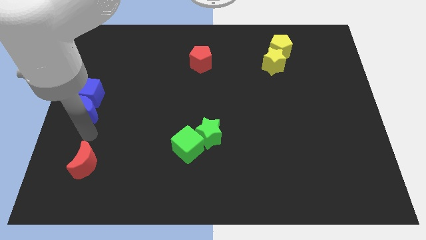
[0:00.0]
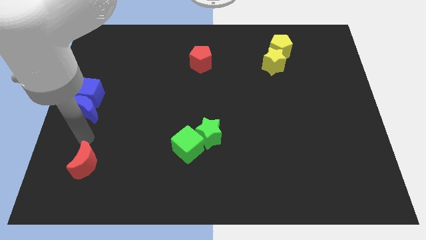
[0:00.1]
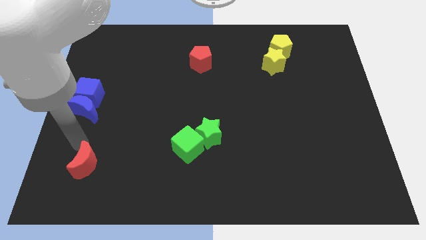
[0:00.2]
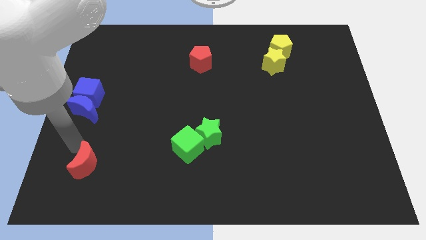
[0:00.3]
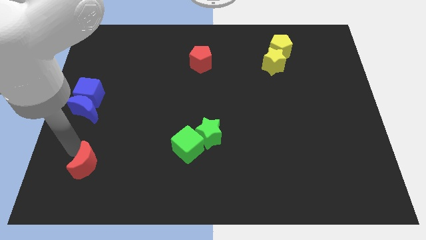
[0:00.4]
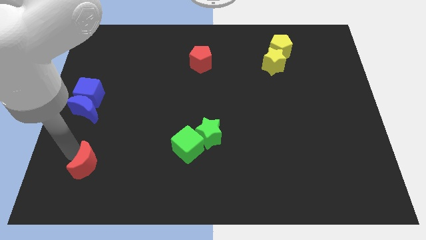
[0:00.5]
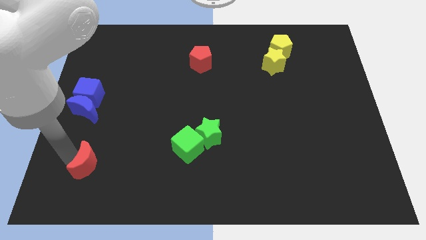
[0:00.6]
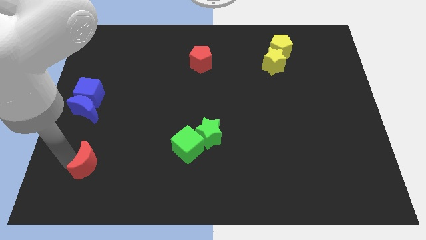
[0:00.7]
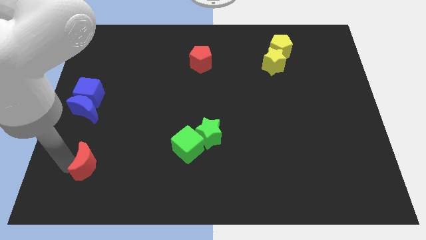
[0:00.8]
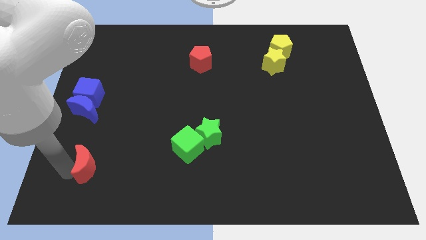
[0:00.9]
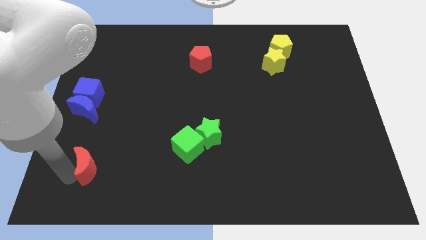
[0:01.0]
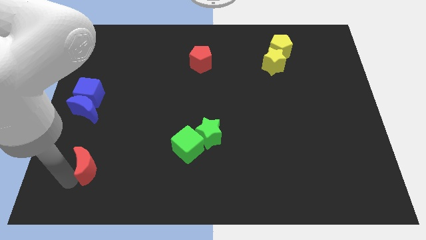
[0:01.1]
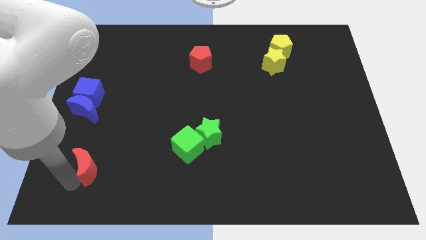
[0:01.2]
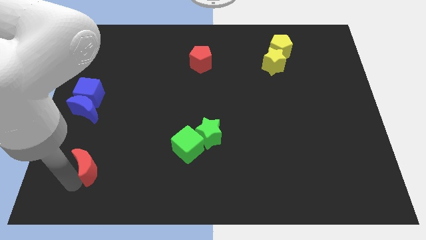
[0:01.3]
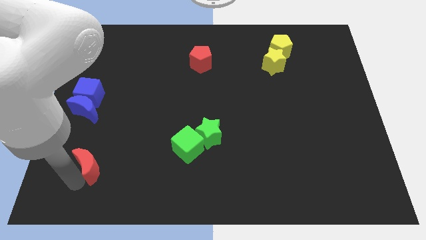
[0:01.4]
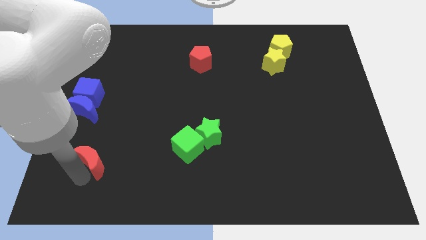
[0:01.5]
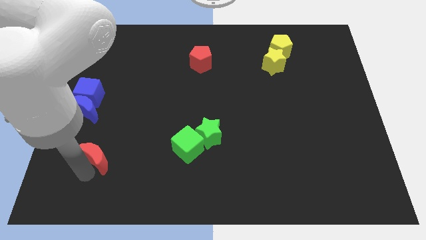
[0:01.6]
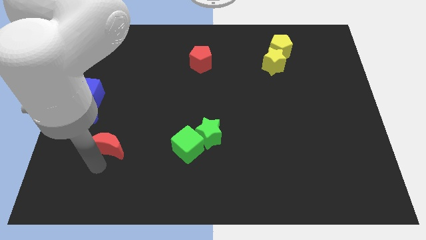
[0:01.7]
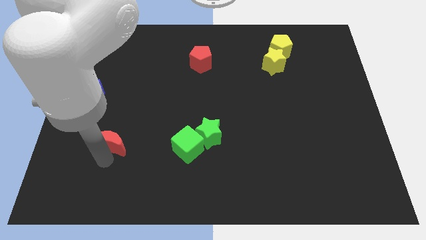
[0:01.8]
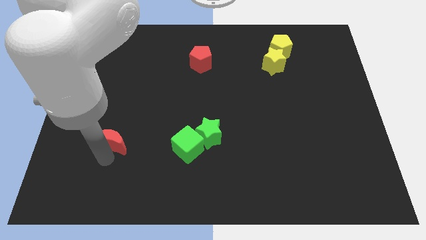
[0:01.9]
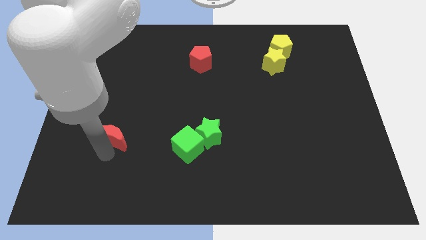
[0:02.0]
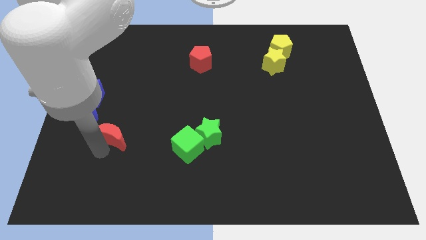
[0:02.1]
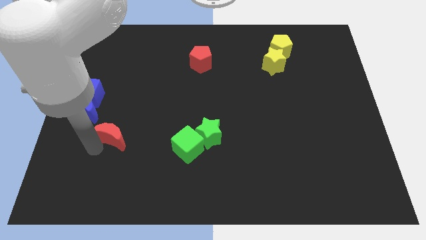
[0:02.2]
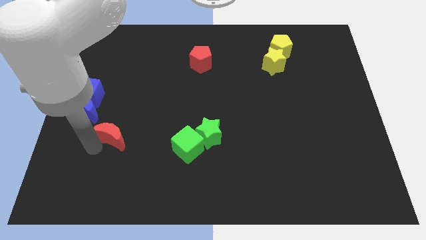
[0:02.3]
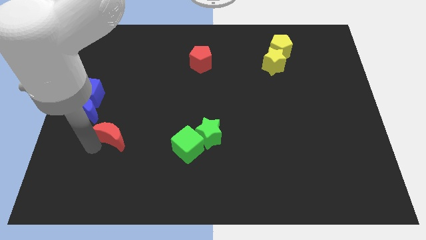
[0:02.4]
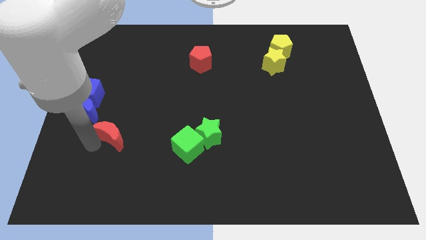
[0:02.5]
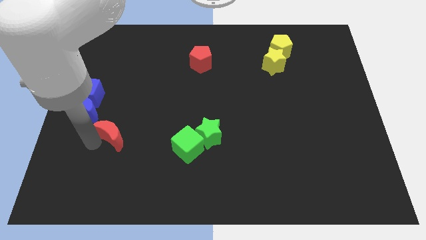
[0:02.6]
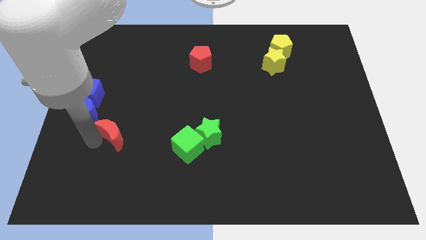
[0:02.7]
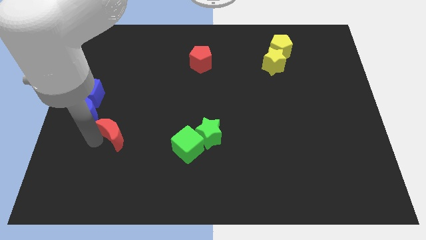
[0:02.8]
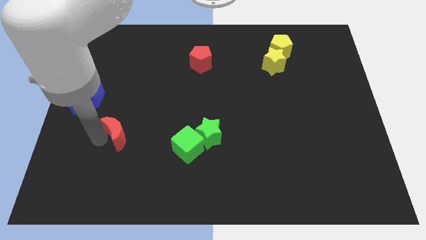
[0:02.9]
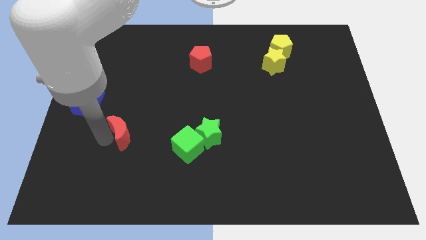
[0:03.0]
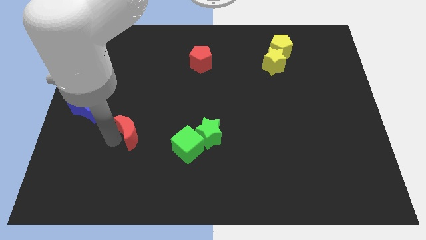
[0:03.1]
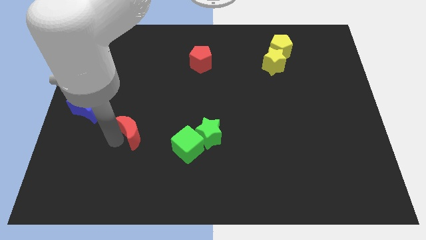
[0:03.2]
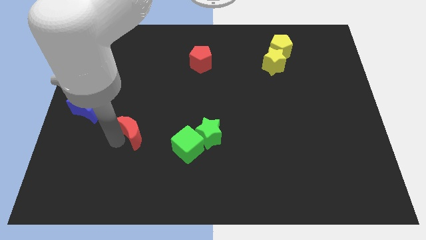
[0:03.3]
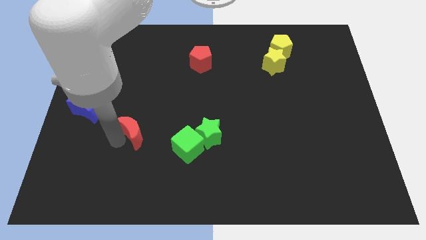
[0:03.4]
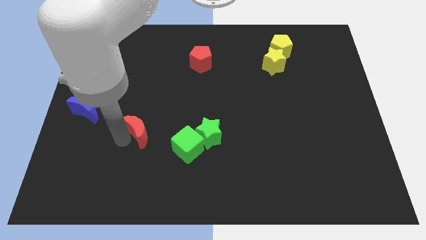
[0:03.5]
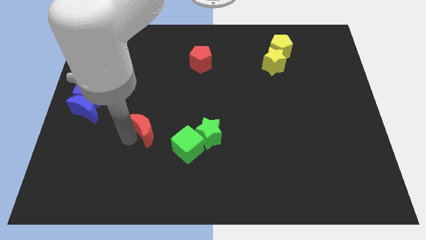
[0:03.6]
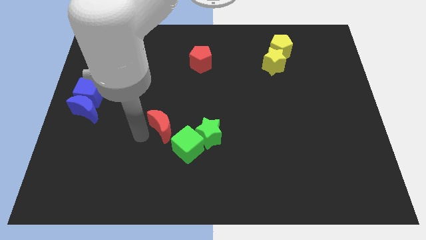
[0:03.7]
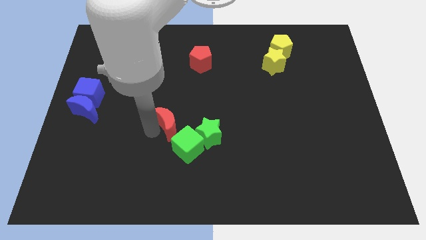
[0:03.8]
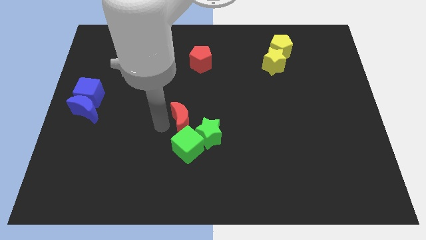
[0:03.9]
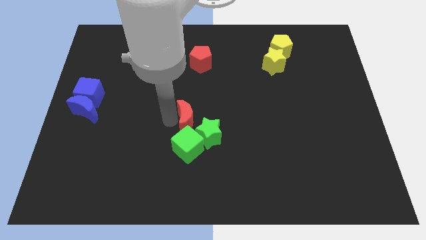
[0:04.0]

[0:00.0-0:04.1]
move the red crescent to the top of the green cube

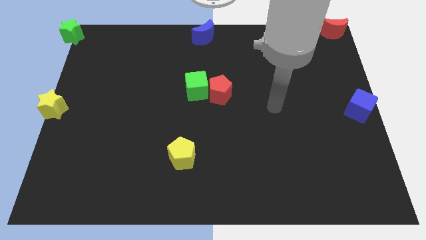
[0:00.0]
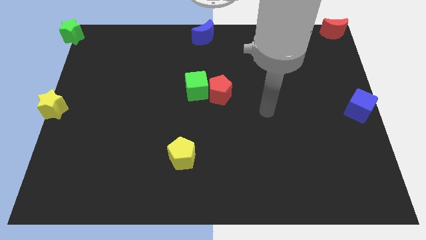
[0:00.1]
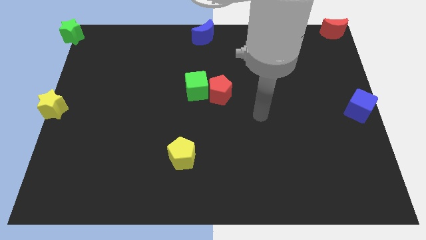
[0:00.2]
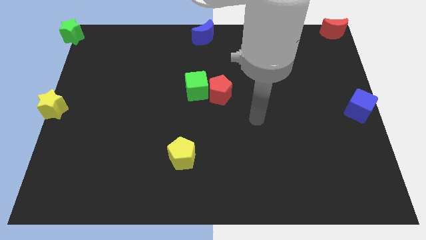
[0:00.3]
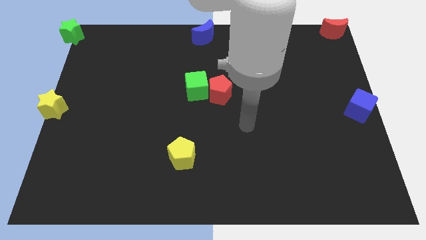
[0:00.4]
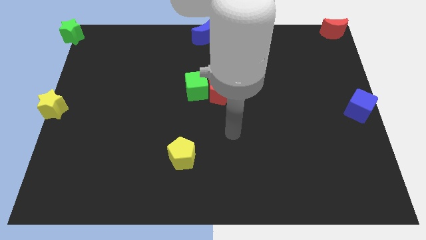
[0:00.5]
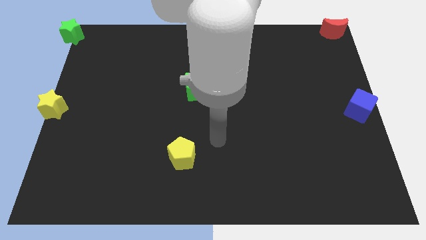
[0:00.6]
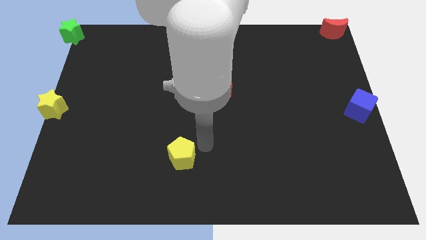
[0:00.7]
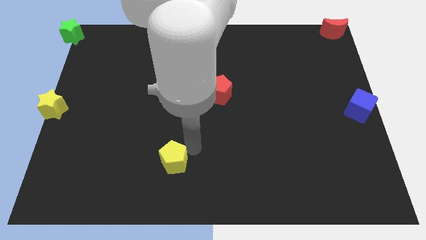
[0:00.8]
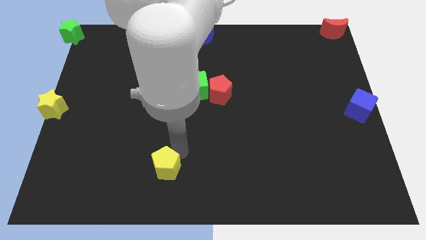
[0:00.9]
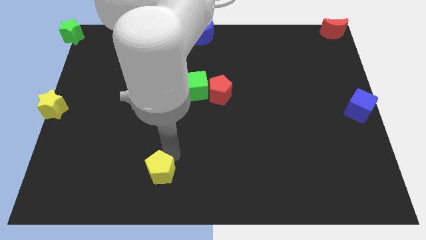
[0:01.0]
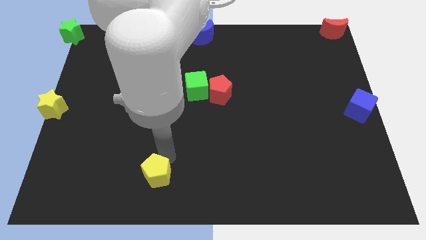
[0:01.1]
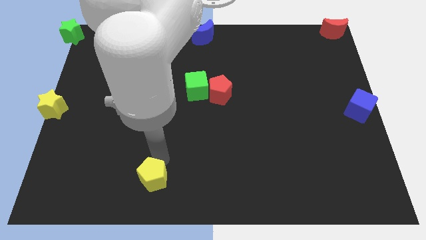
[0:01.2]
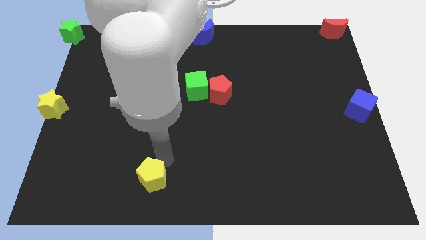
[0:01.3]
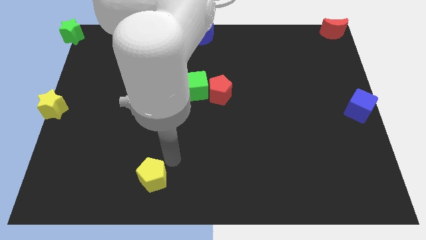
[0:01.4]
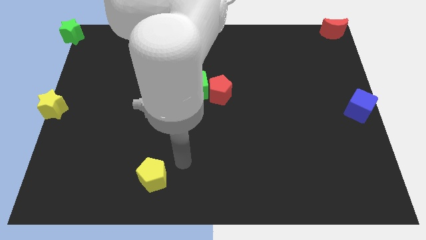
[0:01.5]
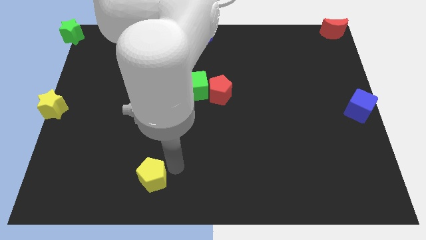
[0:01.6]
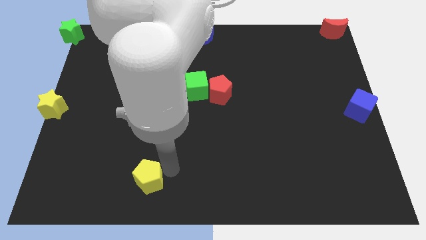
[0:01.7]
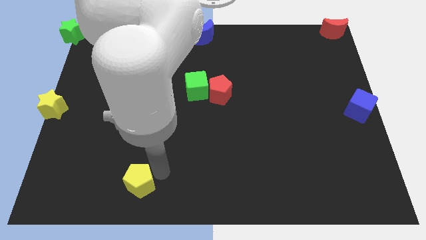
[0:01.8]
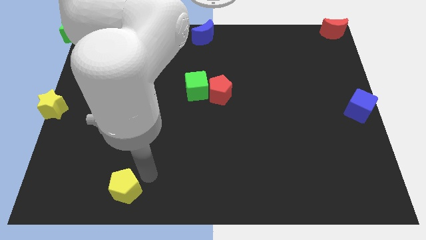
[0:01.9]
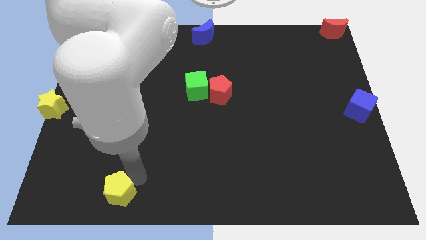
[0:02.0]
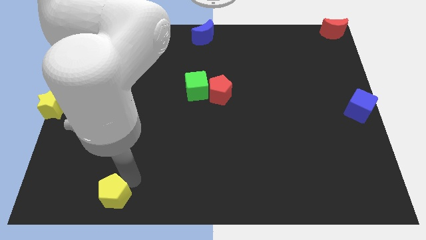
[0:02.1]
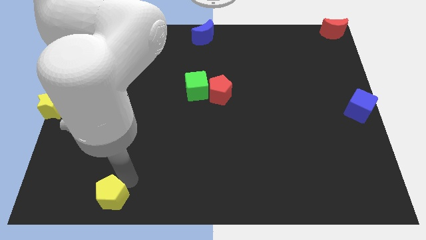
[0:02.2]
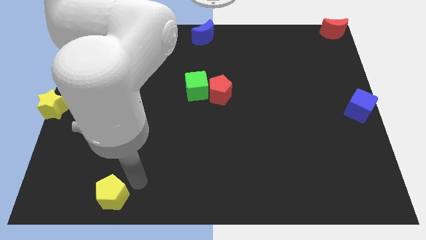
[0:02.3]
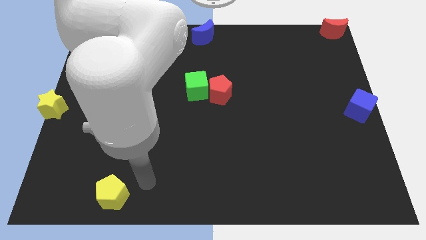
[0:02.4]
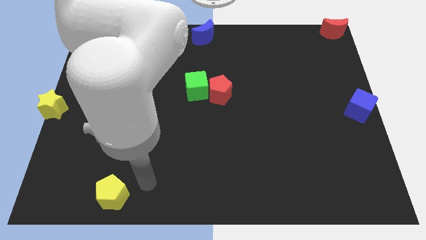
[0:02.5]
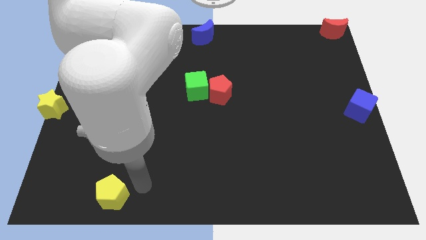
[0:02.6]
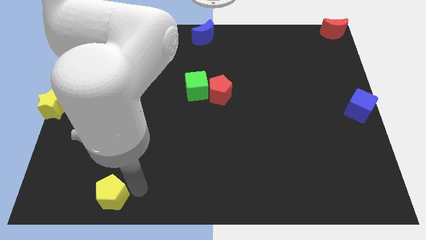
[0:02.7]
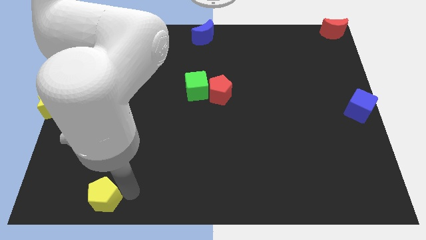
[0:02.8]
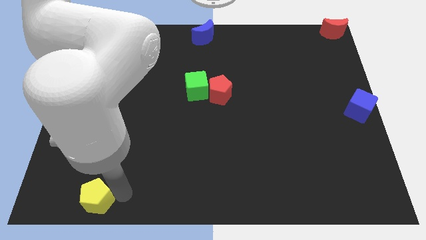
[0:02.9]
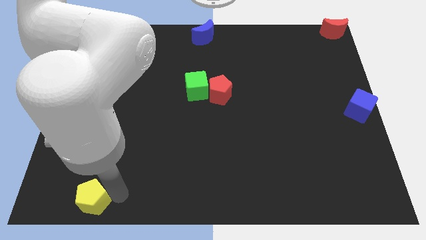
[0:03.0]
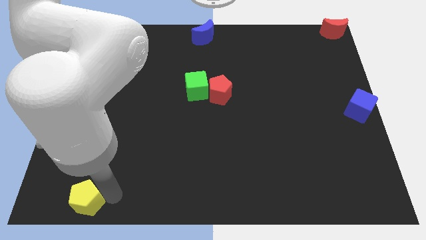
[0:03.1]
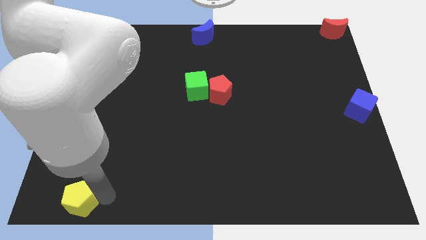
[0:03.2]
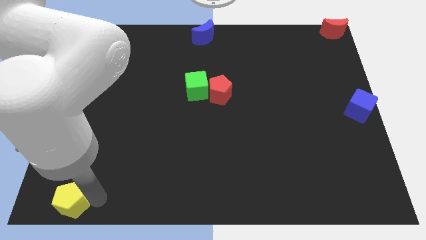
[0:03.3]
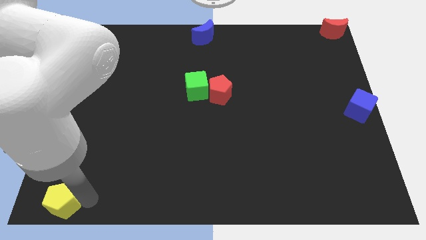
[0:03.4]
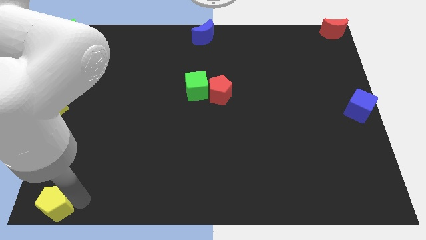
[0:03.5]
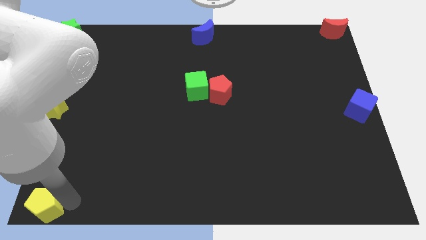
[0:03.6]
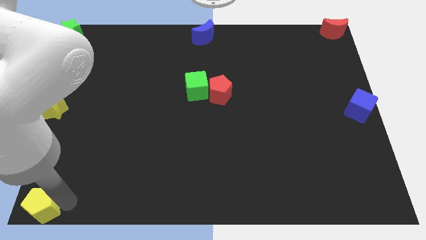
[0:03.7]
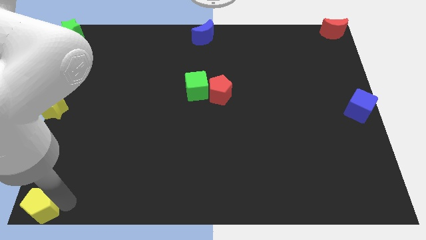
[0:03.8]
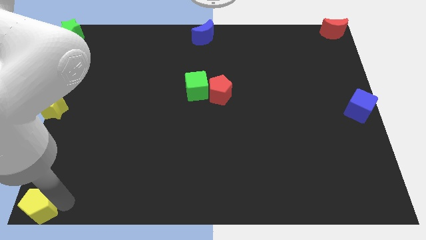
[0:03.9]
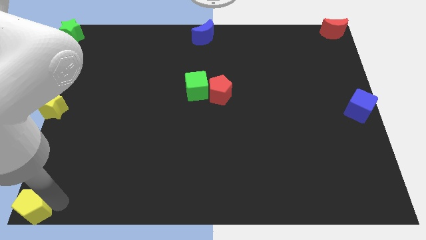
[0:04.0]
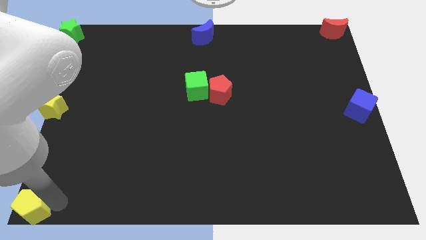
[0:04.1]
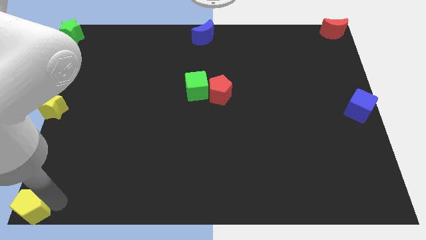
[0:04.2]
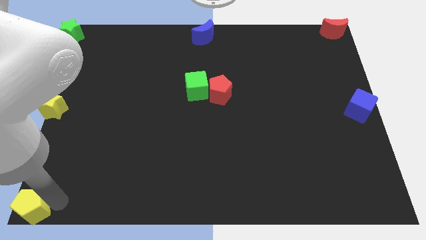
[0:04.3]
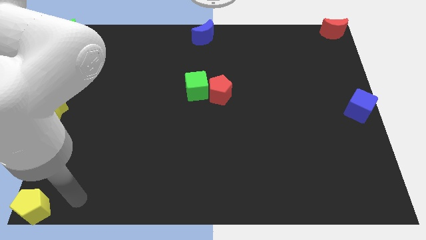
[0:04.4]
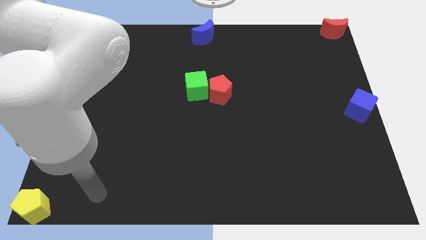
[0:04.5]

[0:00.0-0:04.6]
put the yellow pentagon to the bottom left corner

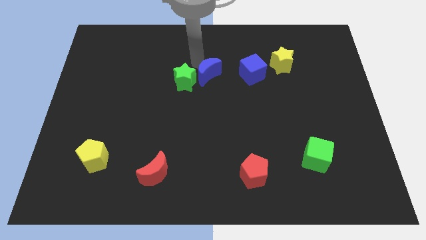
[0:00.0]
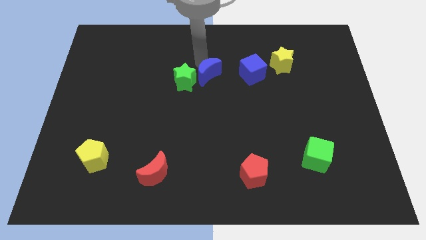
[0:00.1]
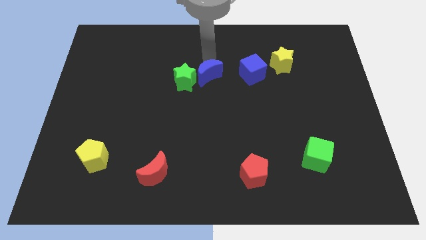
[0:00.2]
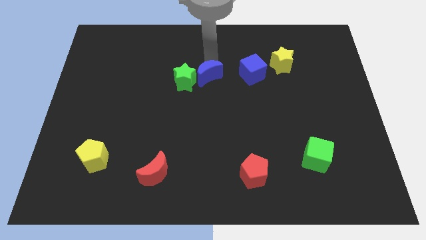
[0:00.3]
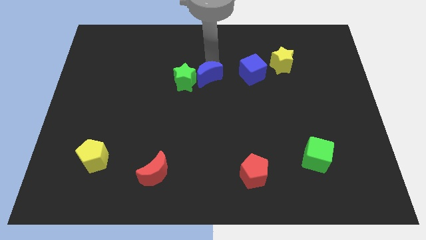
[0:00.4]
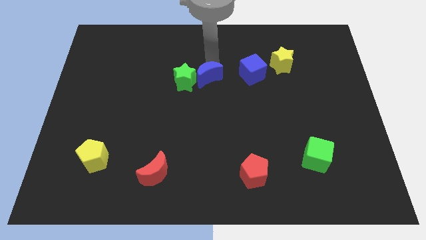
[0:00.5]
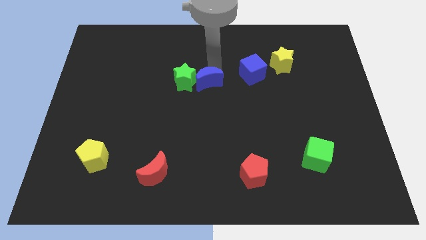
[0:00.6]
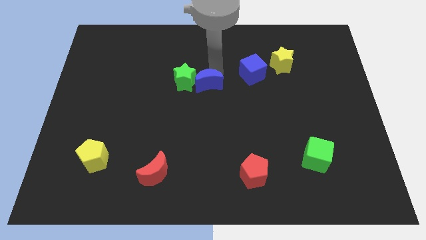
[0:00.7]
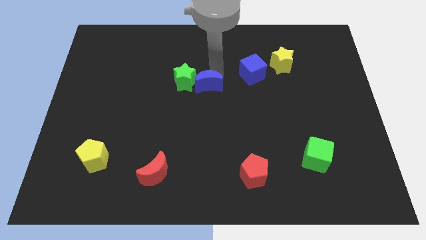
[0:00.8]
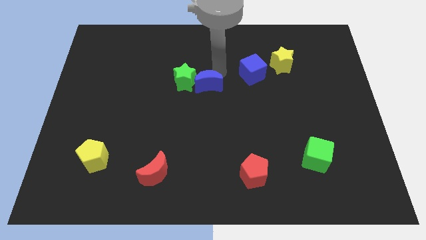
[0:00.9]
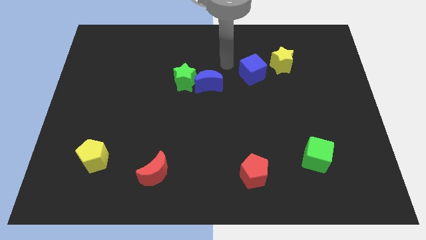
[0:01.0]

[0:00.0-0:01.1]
slide the blue moon a slightly down
